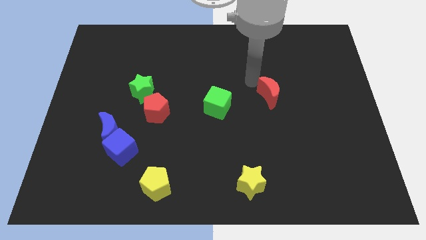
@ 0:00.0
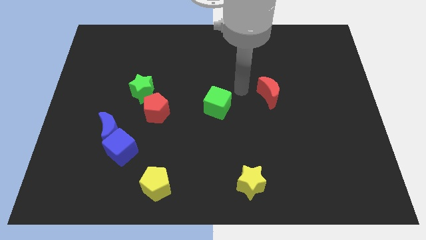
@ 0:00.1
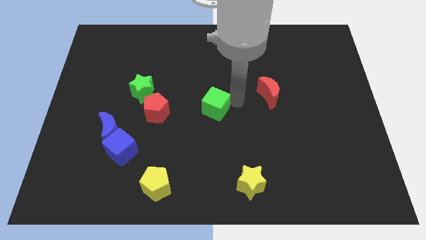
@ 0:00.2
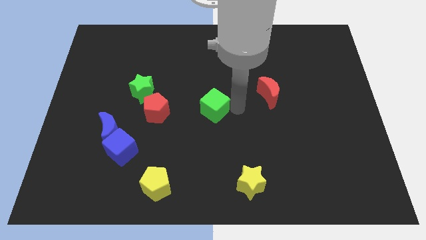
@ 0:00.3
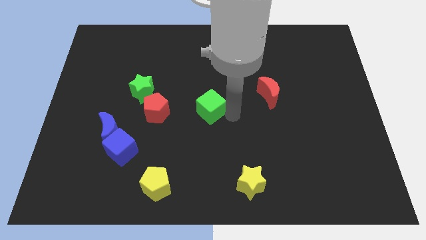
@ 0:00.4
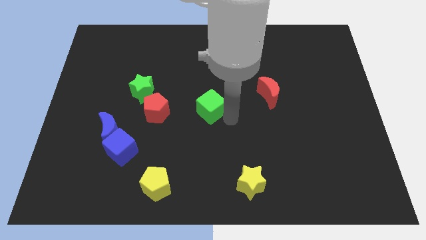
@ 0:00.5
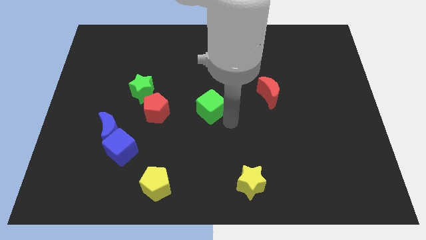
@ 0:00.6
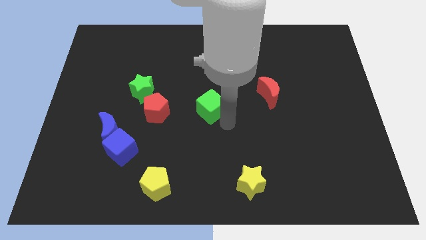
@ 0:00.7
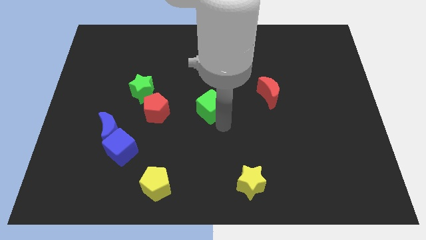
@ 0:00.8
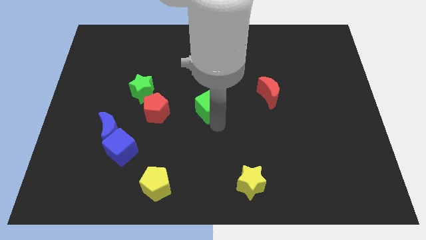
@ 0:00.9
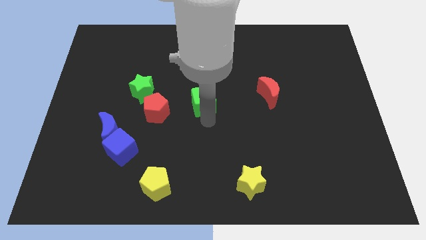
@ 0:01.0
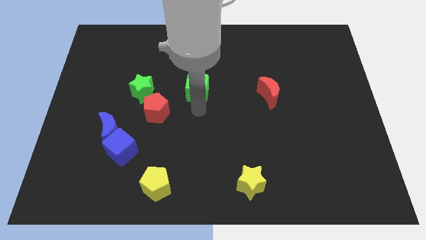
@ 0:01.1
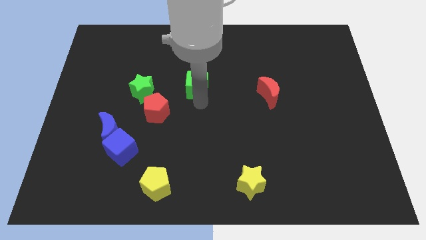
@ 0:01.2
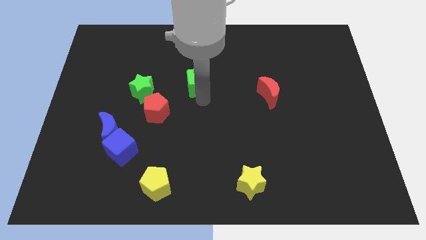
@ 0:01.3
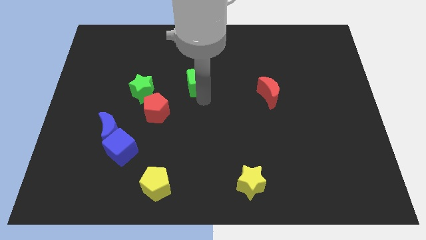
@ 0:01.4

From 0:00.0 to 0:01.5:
push the green cube diagonally top right to the red pentagon

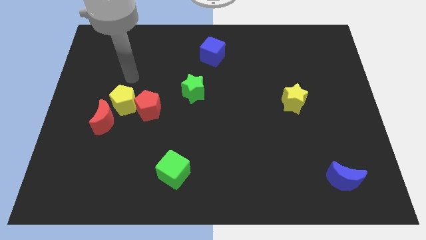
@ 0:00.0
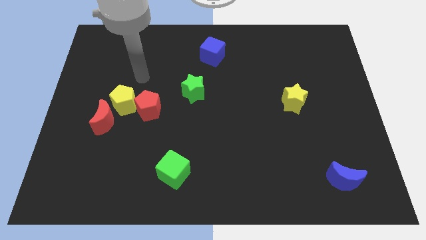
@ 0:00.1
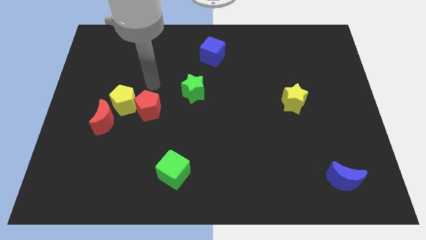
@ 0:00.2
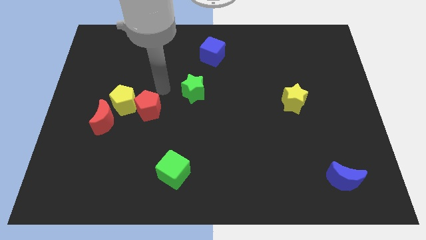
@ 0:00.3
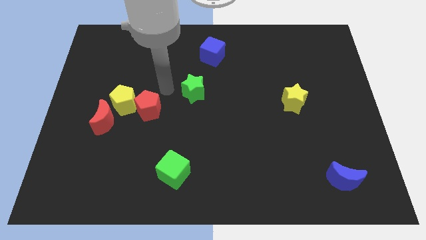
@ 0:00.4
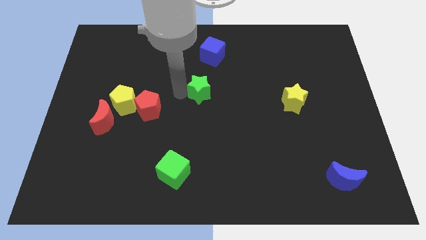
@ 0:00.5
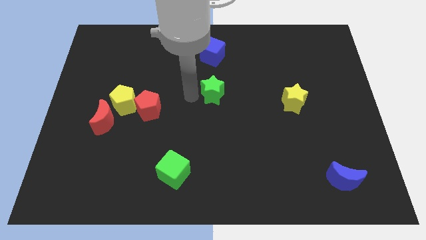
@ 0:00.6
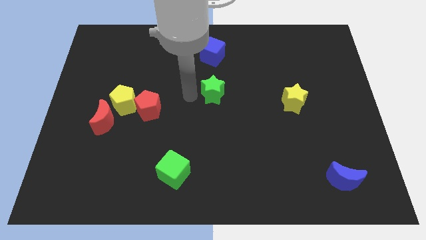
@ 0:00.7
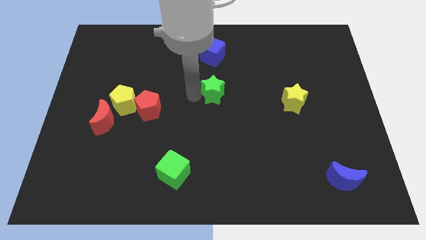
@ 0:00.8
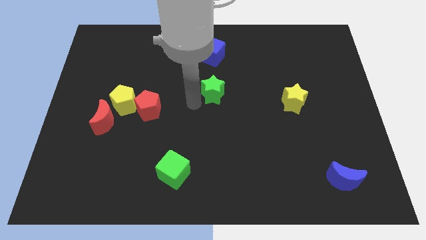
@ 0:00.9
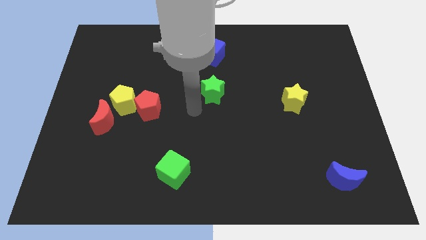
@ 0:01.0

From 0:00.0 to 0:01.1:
place the green star below the blue cube

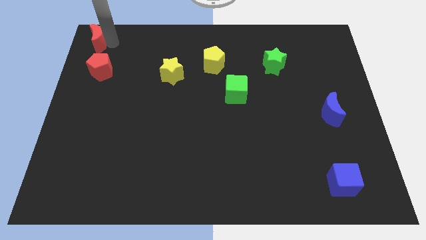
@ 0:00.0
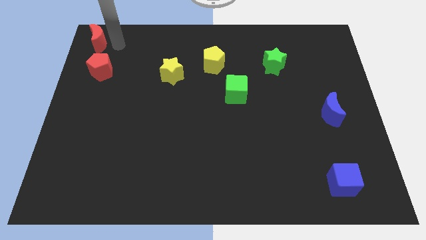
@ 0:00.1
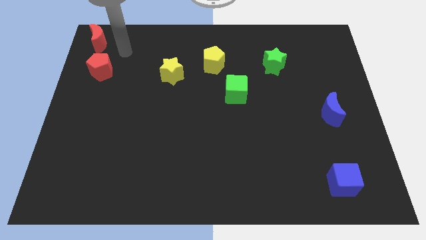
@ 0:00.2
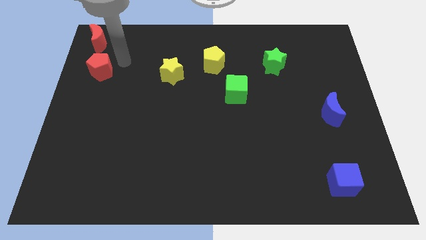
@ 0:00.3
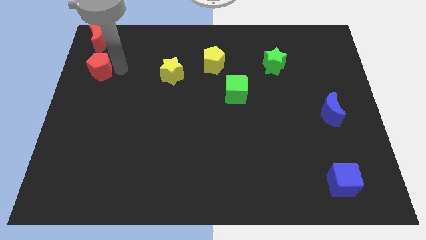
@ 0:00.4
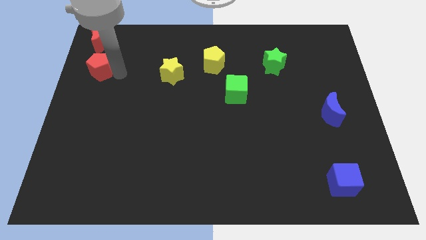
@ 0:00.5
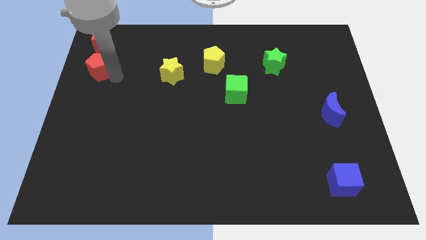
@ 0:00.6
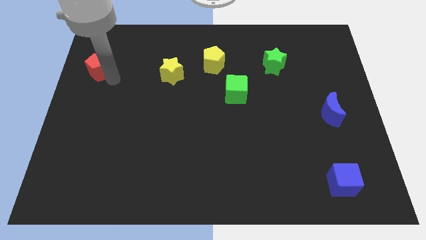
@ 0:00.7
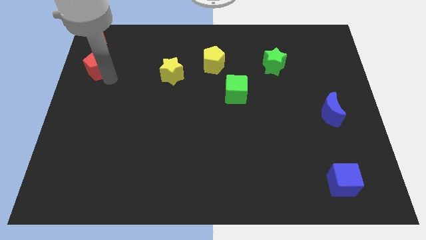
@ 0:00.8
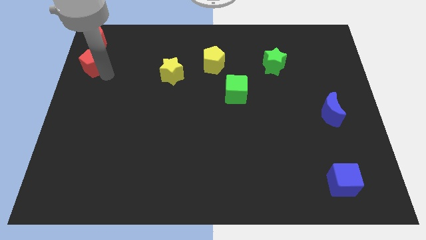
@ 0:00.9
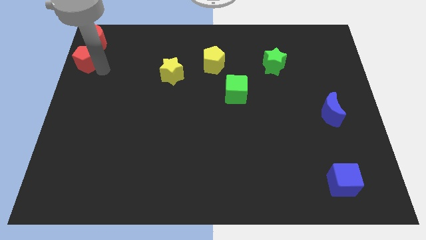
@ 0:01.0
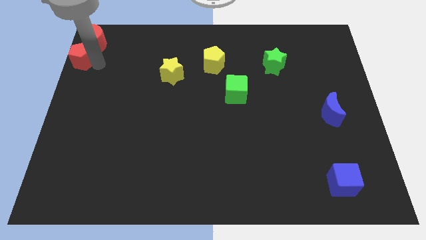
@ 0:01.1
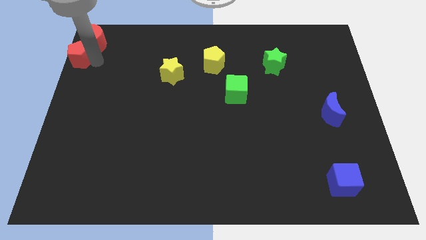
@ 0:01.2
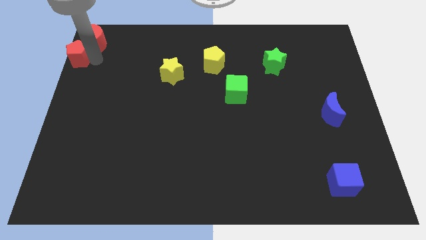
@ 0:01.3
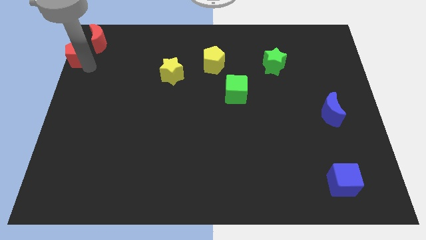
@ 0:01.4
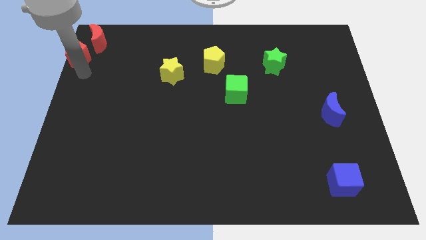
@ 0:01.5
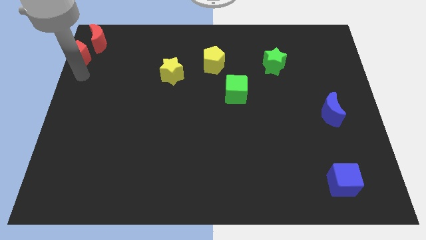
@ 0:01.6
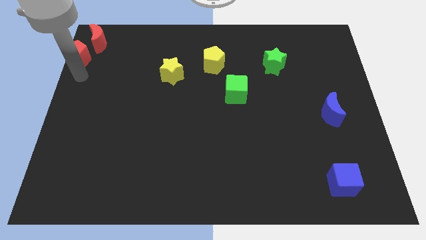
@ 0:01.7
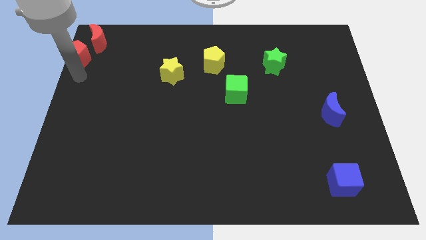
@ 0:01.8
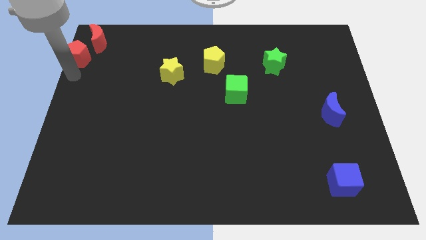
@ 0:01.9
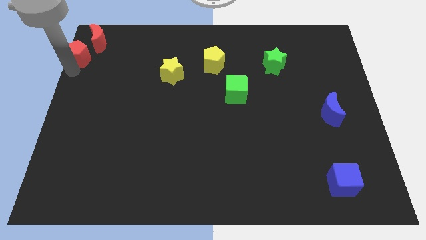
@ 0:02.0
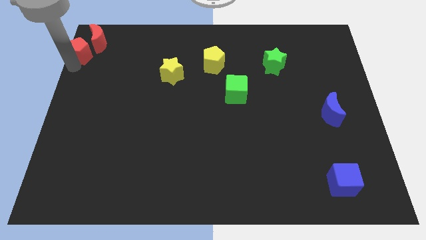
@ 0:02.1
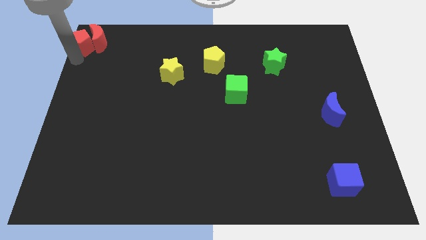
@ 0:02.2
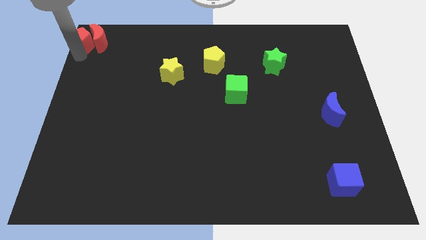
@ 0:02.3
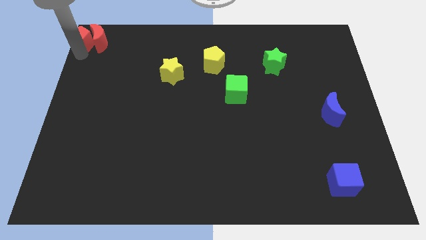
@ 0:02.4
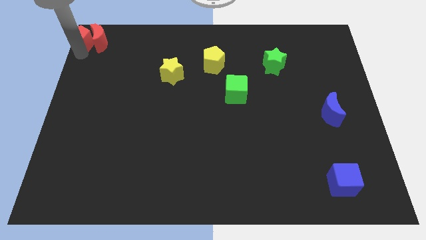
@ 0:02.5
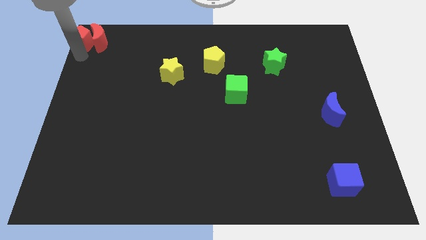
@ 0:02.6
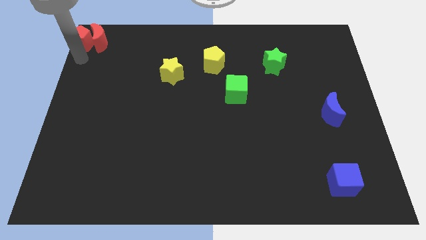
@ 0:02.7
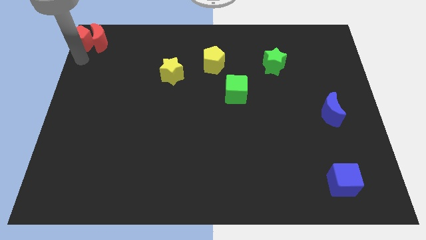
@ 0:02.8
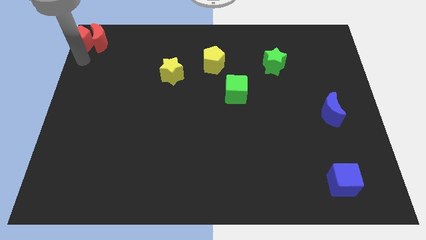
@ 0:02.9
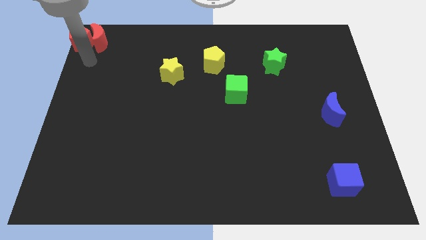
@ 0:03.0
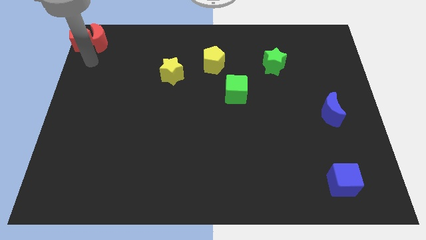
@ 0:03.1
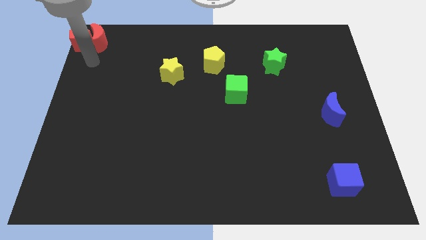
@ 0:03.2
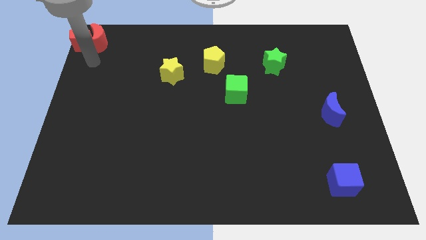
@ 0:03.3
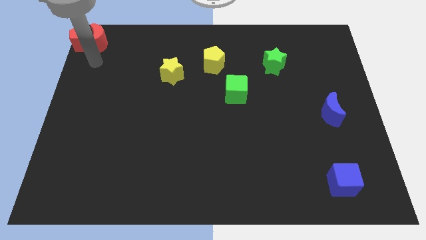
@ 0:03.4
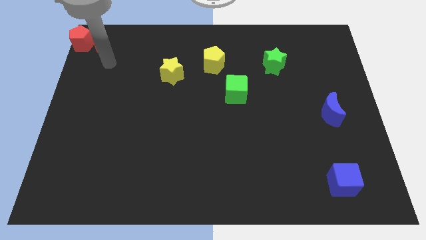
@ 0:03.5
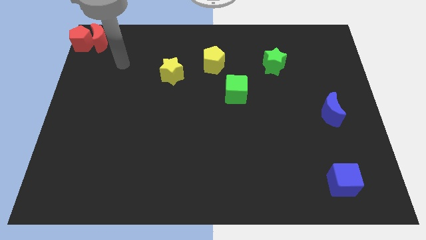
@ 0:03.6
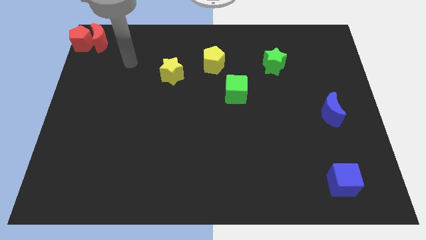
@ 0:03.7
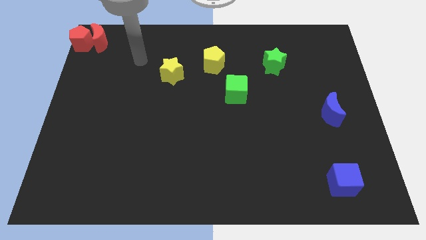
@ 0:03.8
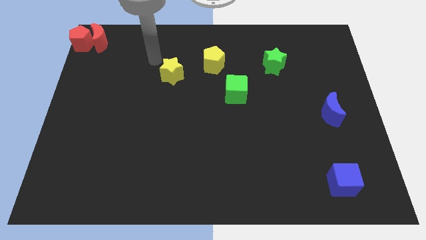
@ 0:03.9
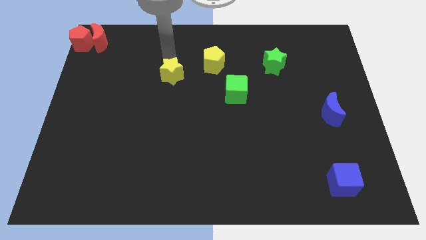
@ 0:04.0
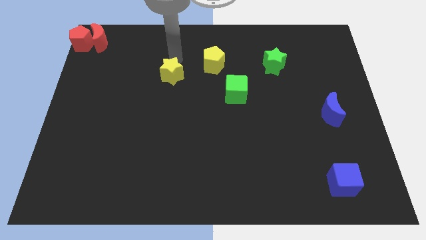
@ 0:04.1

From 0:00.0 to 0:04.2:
move red blocks to the top left corner of the board

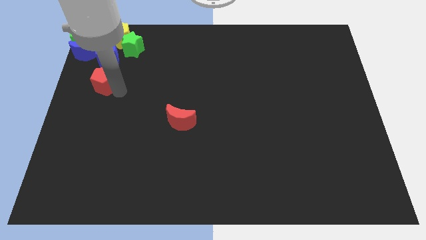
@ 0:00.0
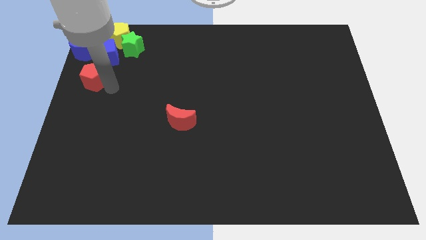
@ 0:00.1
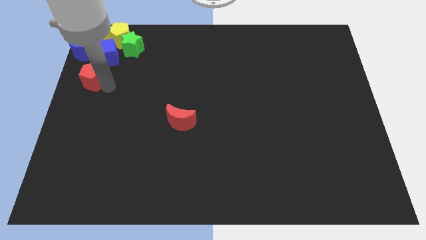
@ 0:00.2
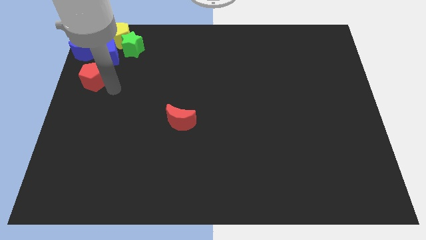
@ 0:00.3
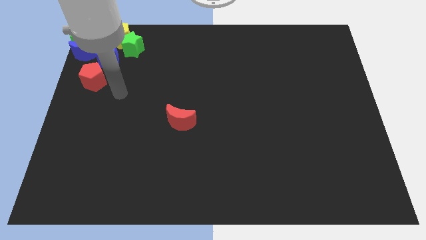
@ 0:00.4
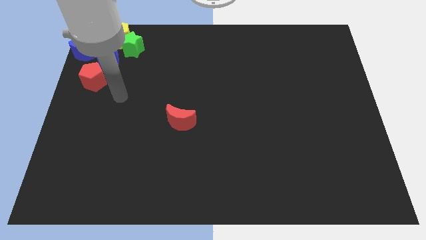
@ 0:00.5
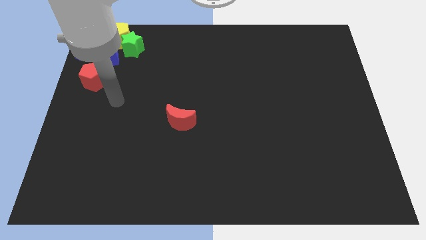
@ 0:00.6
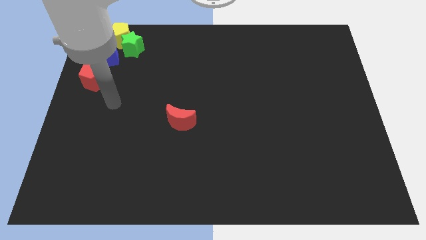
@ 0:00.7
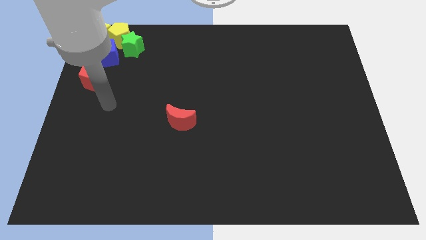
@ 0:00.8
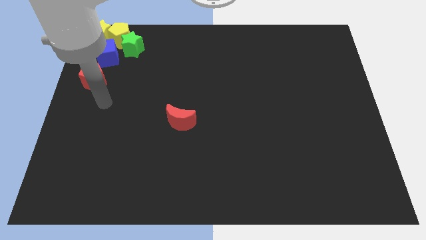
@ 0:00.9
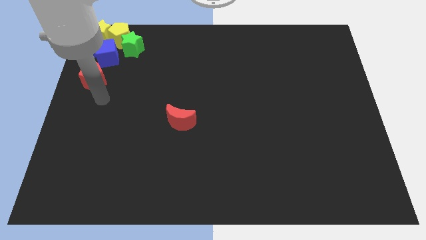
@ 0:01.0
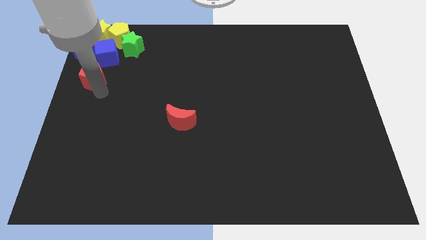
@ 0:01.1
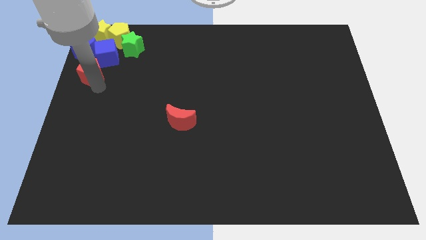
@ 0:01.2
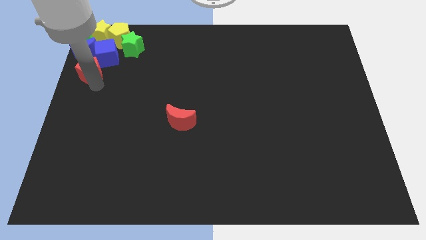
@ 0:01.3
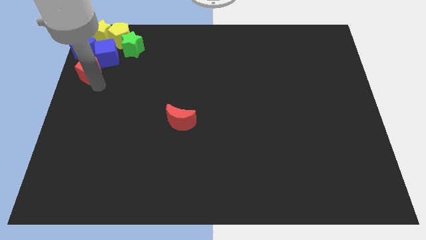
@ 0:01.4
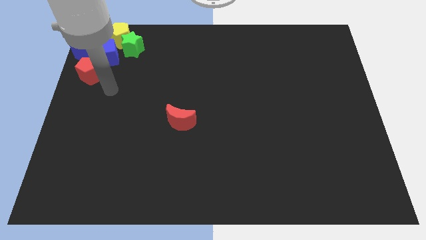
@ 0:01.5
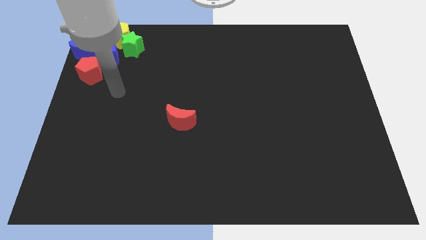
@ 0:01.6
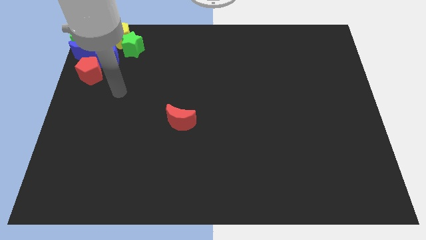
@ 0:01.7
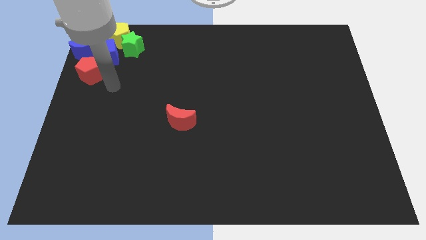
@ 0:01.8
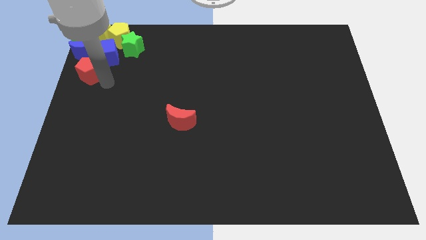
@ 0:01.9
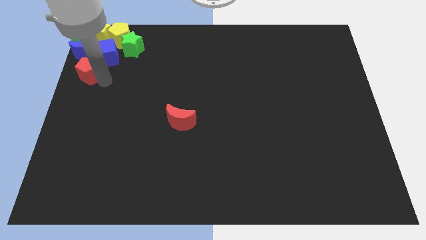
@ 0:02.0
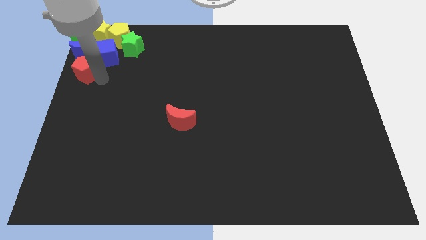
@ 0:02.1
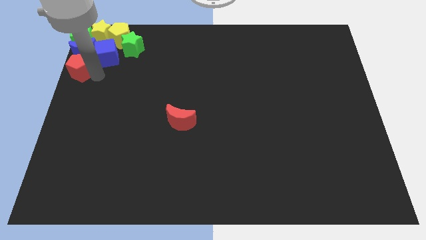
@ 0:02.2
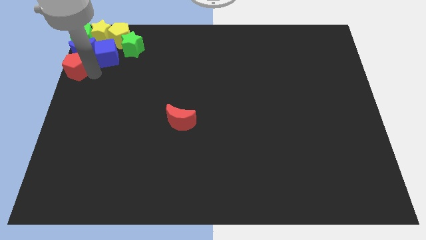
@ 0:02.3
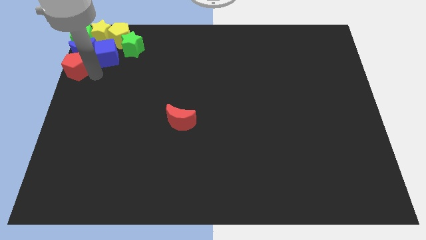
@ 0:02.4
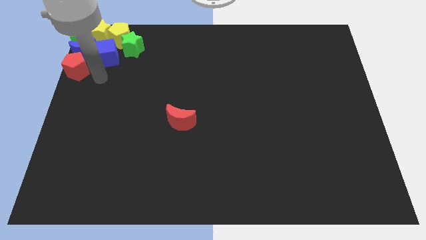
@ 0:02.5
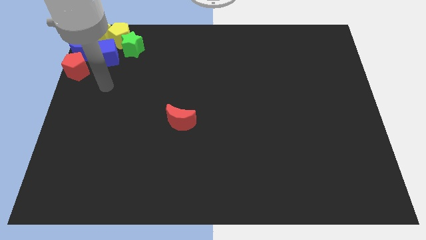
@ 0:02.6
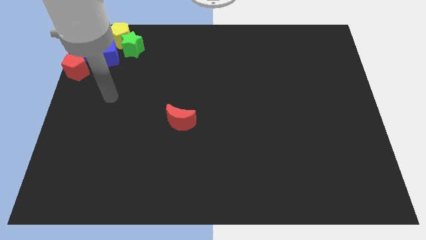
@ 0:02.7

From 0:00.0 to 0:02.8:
push the red pentagon under the blue crescent
